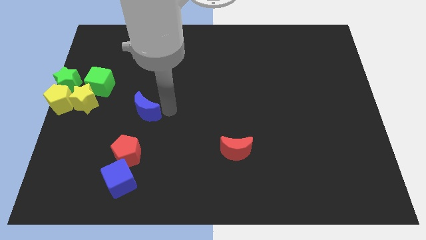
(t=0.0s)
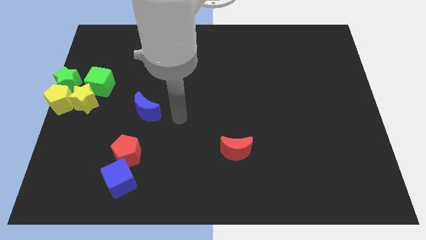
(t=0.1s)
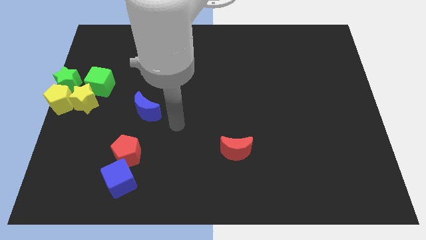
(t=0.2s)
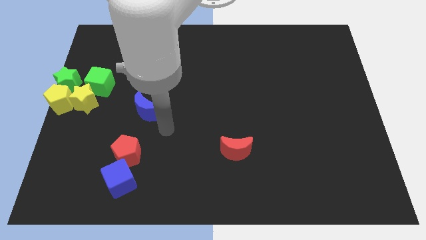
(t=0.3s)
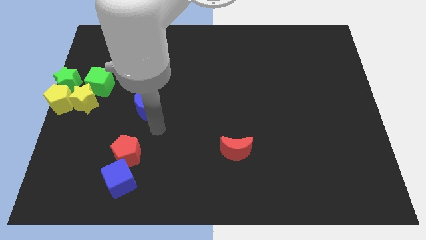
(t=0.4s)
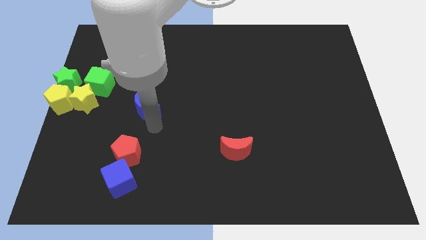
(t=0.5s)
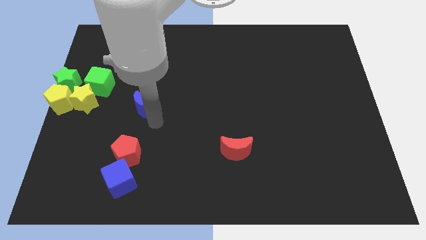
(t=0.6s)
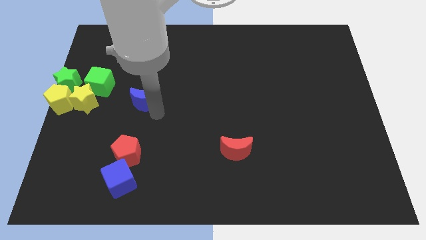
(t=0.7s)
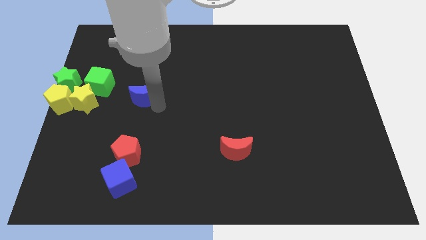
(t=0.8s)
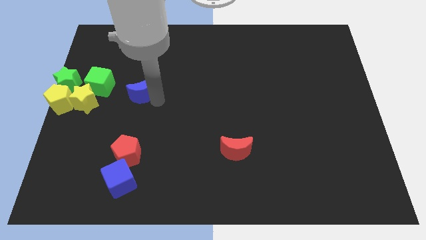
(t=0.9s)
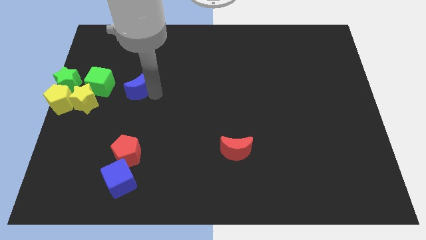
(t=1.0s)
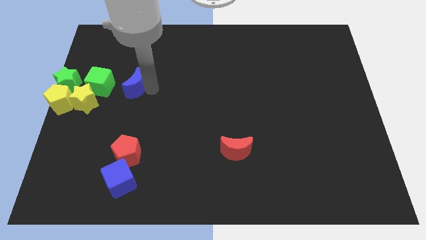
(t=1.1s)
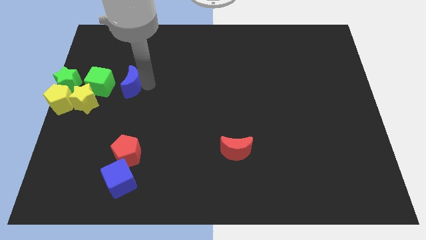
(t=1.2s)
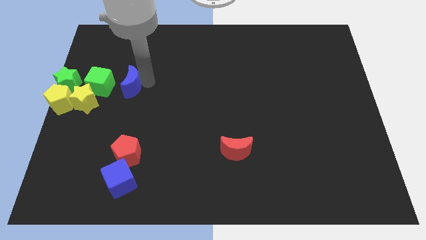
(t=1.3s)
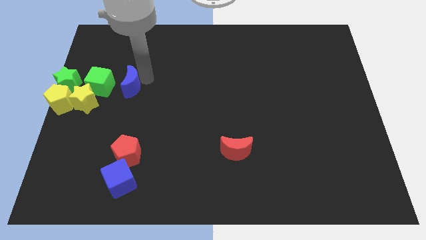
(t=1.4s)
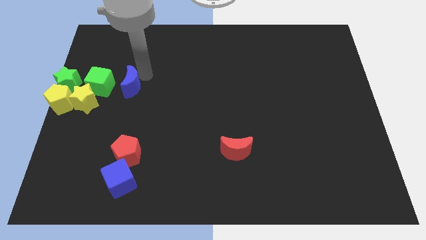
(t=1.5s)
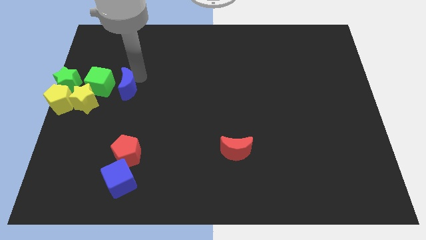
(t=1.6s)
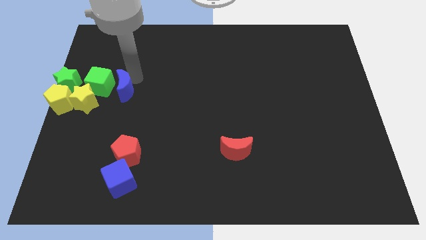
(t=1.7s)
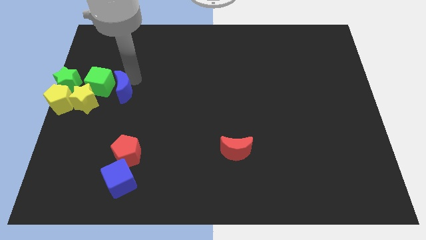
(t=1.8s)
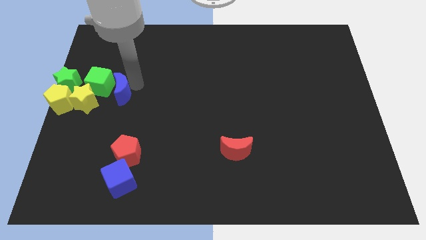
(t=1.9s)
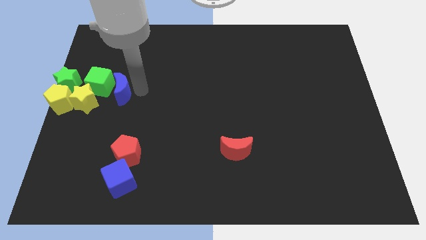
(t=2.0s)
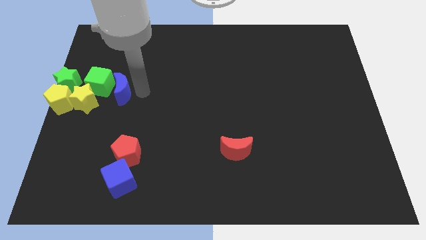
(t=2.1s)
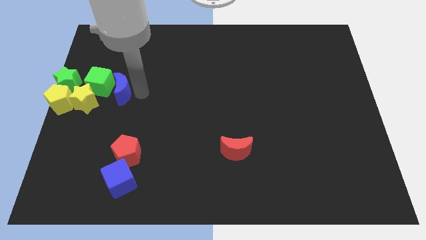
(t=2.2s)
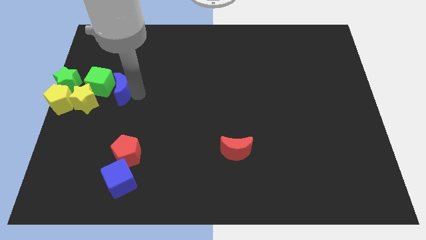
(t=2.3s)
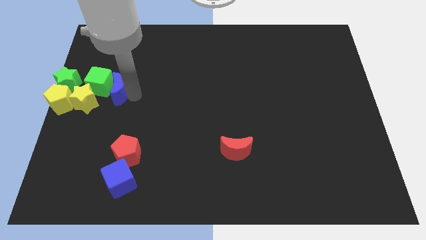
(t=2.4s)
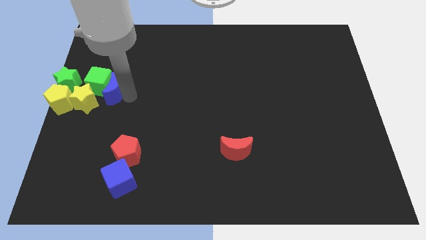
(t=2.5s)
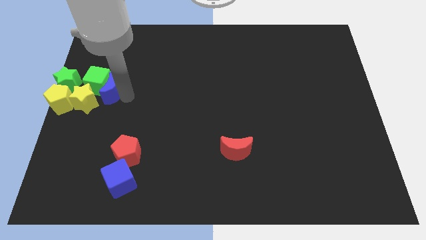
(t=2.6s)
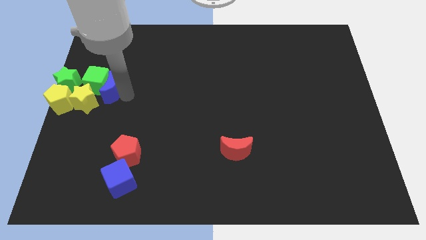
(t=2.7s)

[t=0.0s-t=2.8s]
push blue moon into green cube

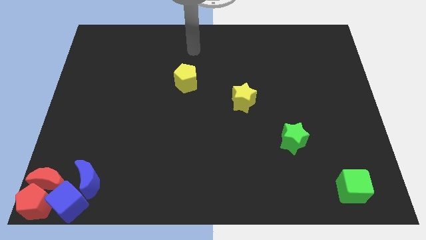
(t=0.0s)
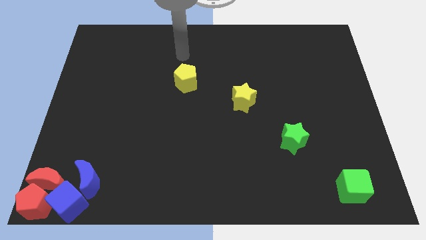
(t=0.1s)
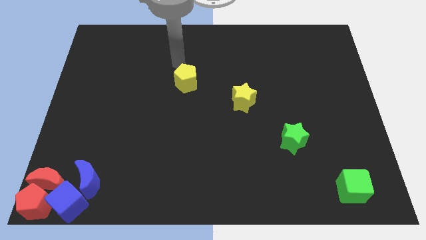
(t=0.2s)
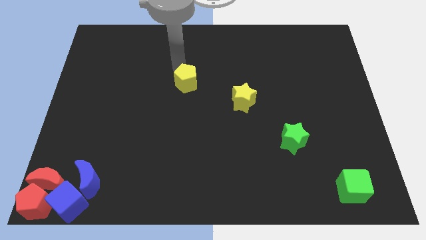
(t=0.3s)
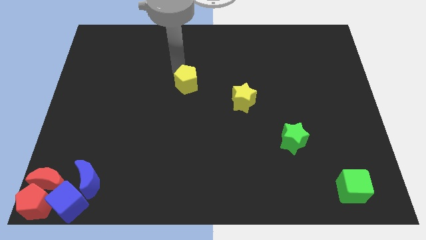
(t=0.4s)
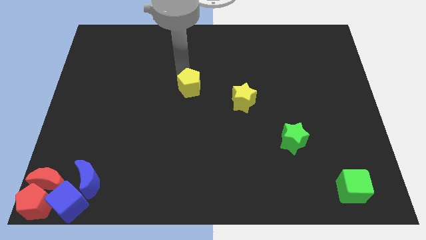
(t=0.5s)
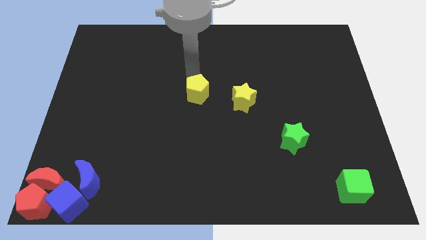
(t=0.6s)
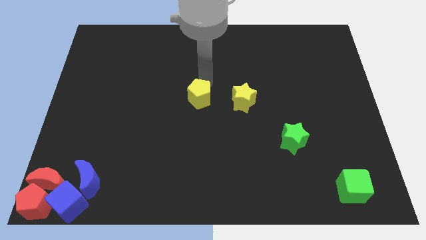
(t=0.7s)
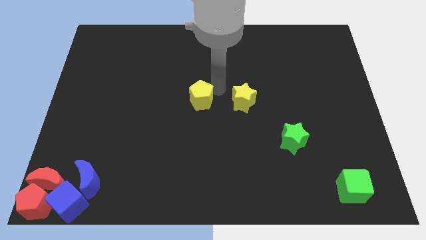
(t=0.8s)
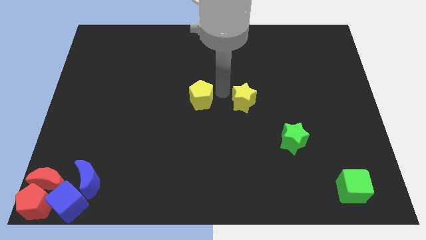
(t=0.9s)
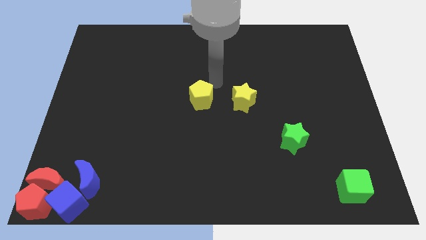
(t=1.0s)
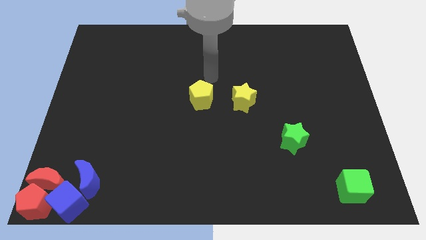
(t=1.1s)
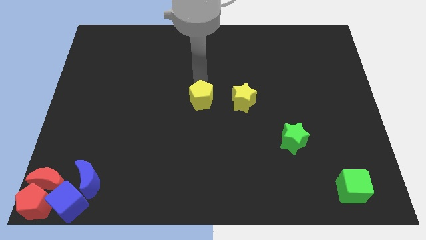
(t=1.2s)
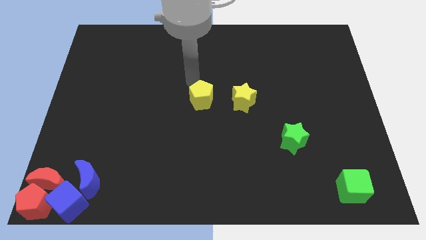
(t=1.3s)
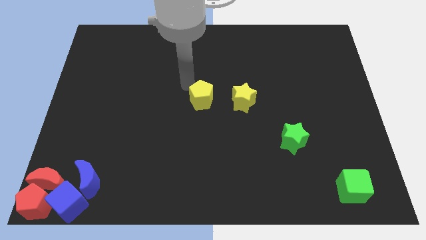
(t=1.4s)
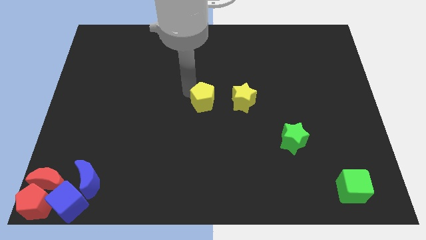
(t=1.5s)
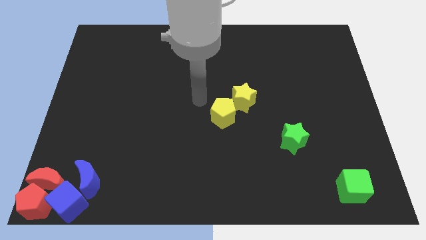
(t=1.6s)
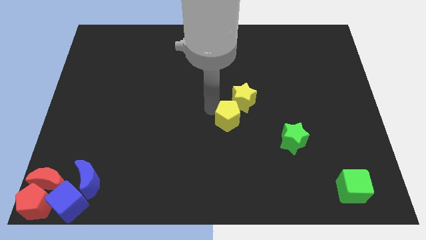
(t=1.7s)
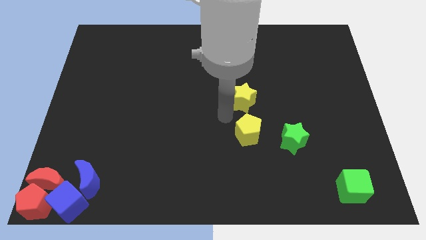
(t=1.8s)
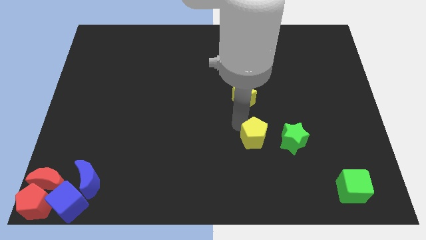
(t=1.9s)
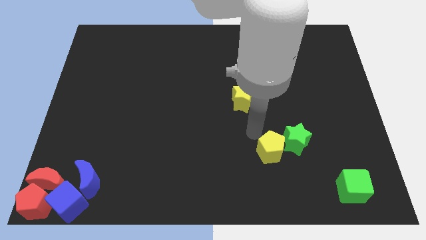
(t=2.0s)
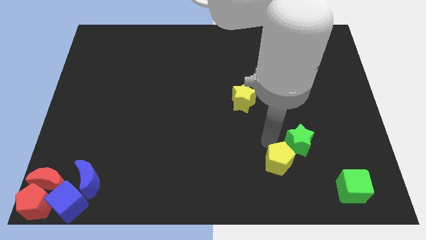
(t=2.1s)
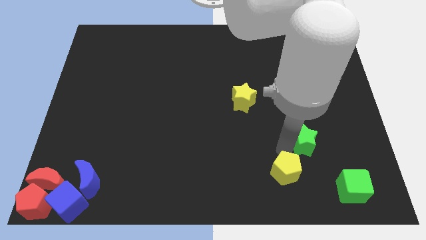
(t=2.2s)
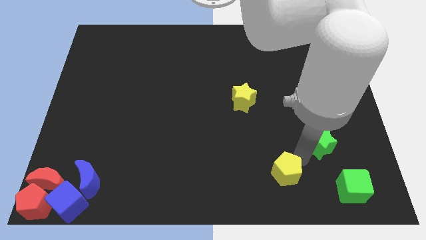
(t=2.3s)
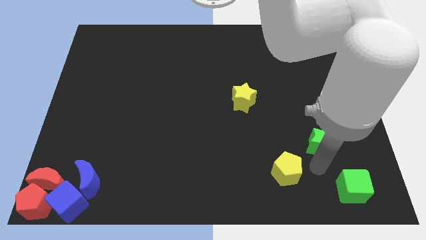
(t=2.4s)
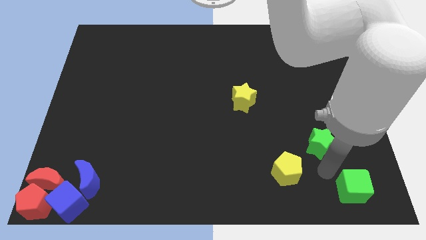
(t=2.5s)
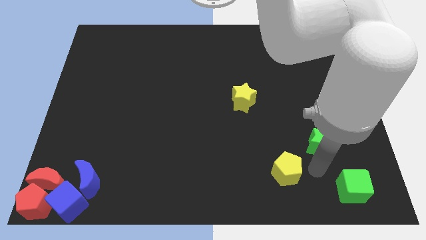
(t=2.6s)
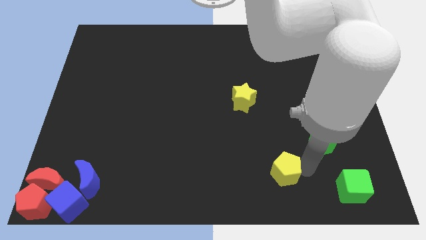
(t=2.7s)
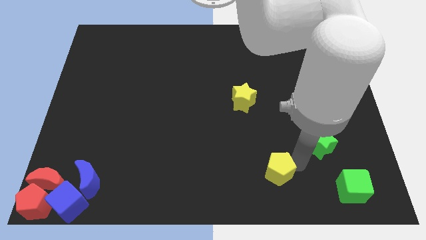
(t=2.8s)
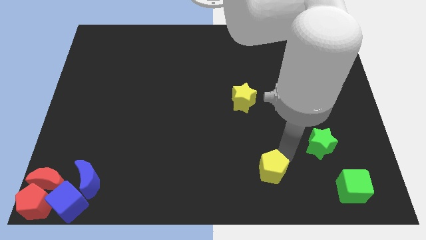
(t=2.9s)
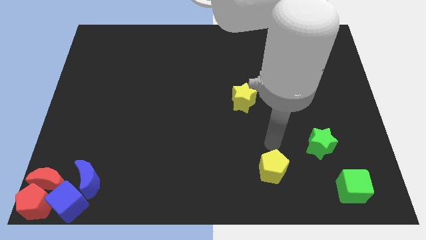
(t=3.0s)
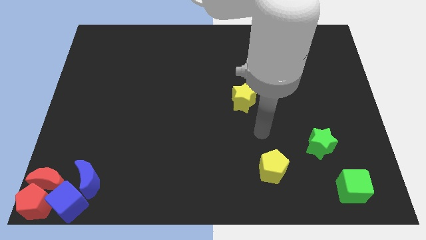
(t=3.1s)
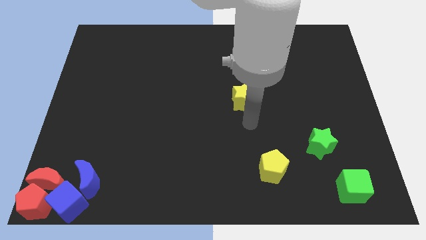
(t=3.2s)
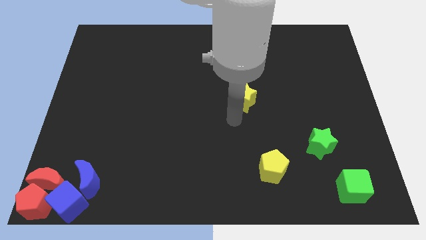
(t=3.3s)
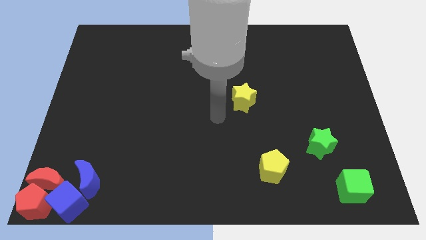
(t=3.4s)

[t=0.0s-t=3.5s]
push the yellow pentagon diagonally on the bottom left side of green star

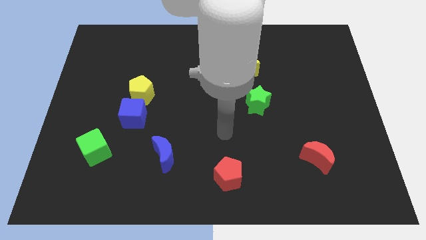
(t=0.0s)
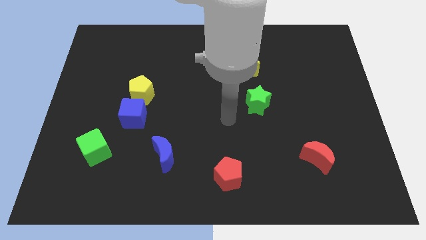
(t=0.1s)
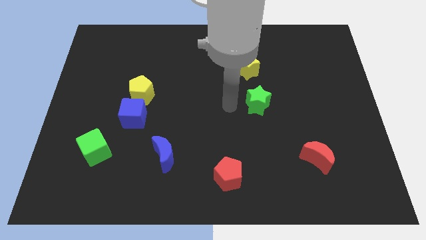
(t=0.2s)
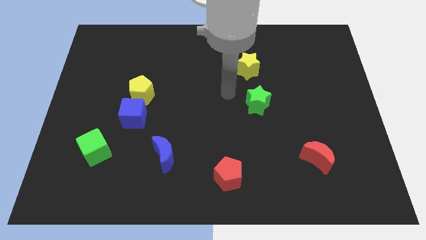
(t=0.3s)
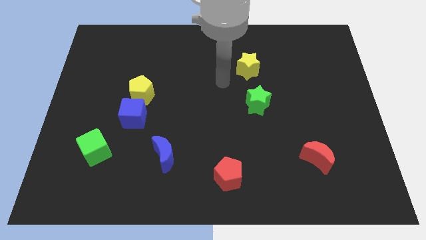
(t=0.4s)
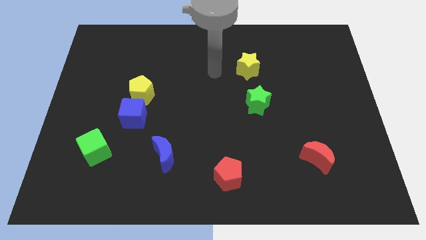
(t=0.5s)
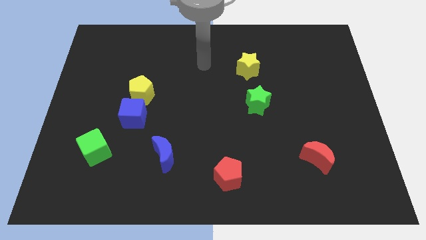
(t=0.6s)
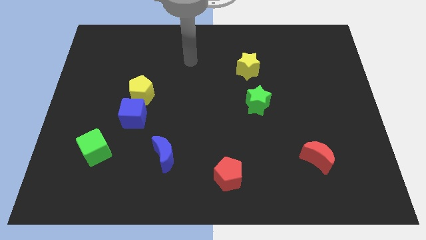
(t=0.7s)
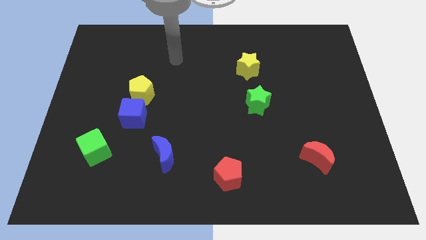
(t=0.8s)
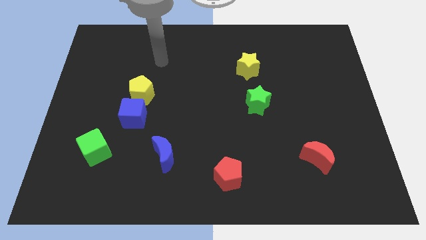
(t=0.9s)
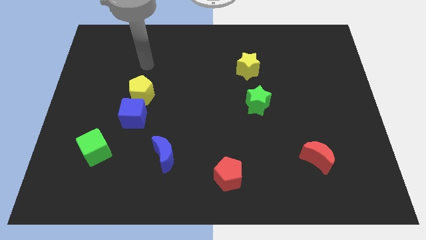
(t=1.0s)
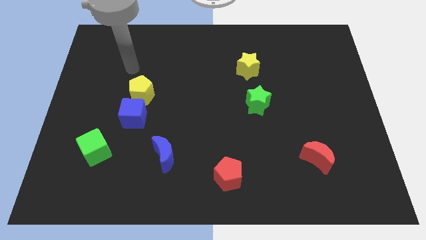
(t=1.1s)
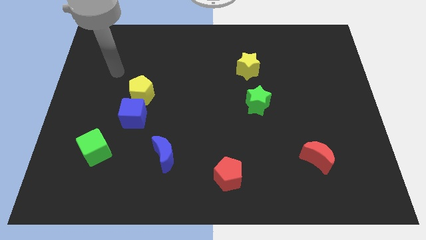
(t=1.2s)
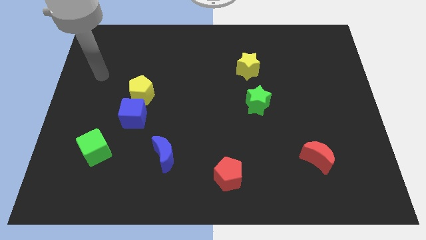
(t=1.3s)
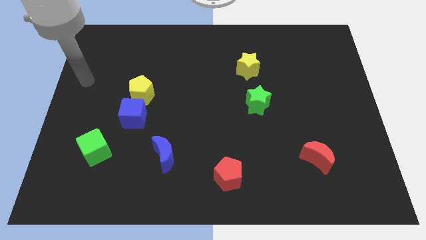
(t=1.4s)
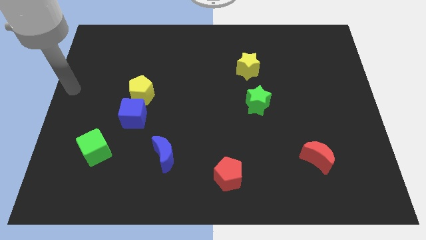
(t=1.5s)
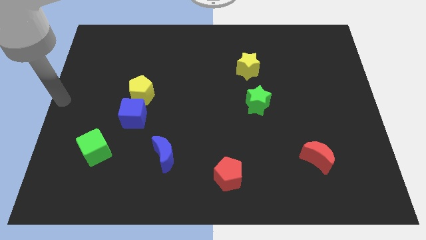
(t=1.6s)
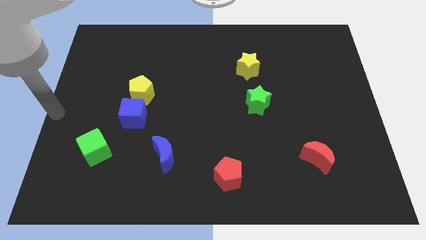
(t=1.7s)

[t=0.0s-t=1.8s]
point your arm at the center left of the board

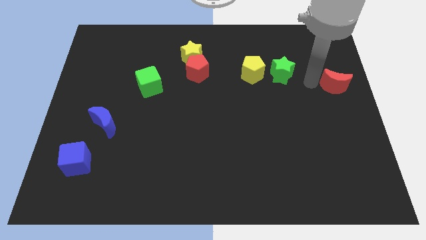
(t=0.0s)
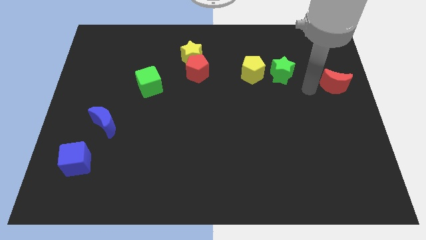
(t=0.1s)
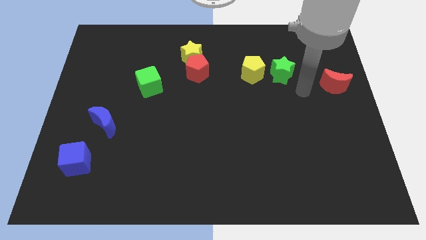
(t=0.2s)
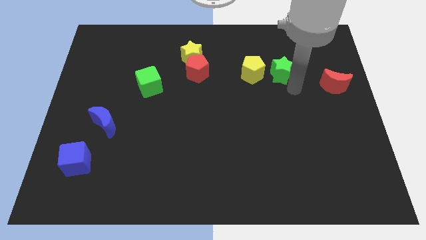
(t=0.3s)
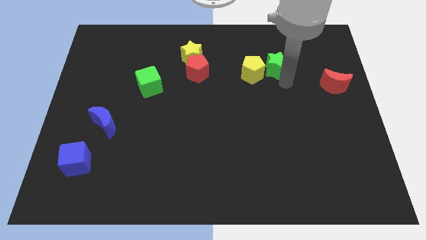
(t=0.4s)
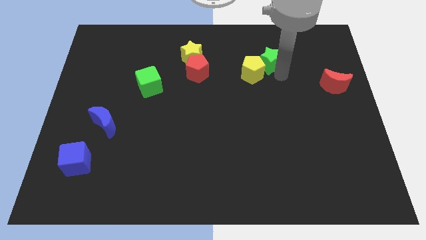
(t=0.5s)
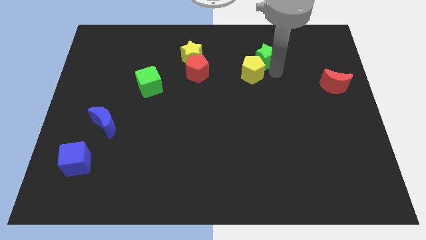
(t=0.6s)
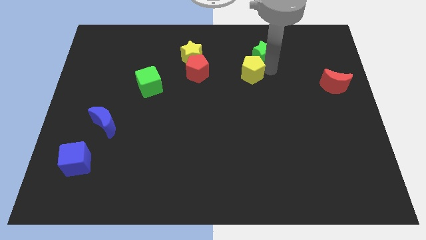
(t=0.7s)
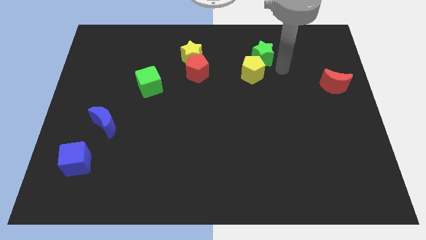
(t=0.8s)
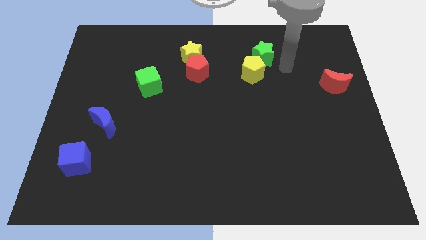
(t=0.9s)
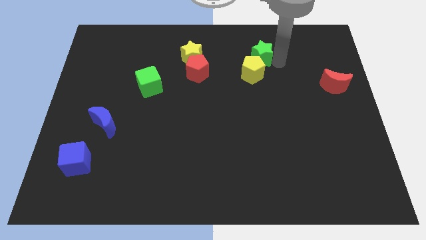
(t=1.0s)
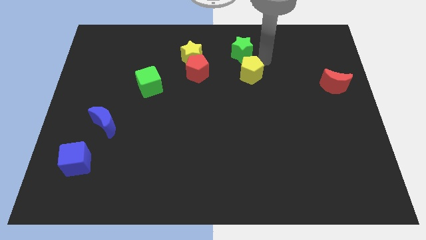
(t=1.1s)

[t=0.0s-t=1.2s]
place the green star above the yellow pentagon
